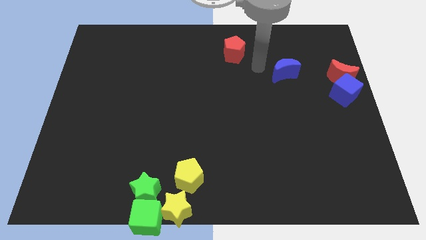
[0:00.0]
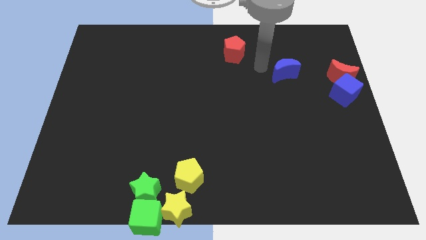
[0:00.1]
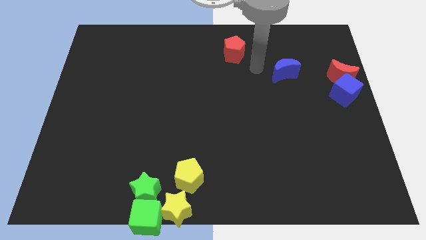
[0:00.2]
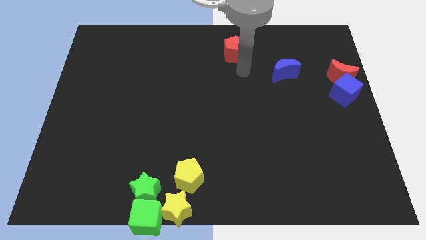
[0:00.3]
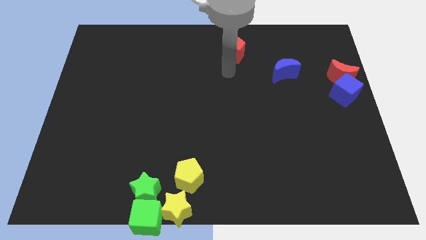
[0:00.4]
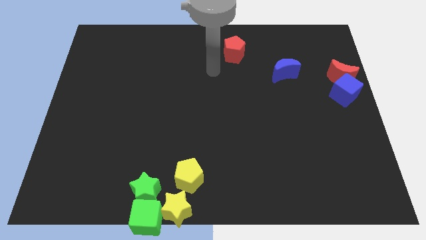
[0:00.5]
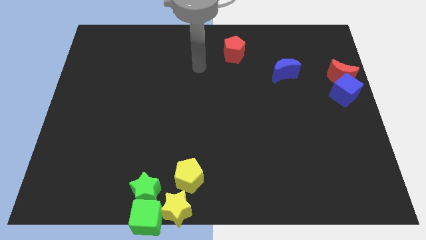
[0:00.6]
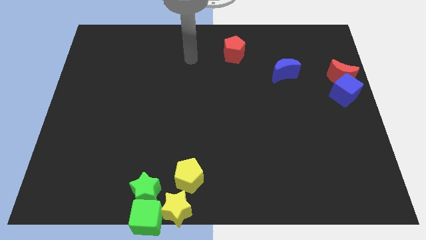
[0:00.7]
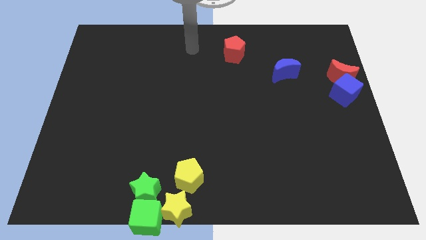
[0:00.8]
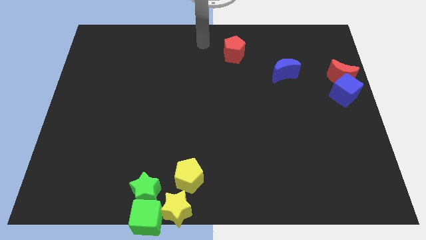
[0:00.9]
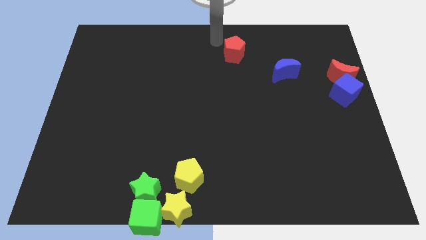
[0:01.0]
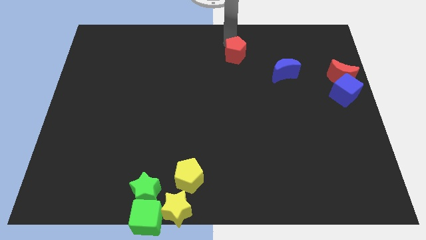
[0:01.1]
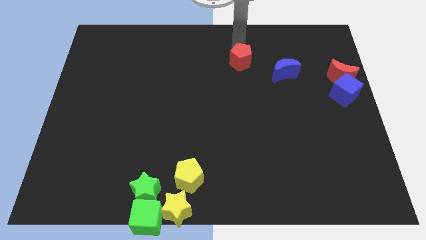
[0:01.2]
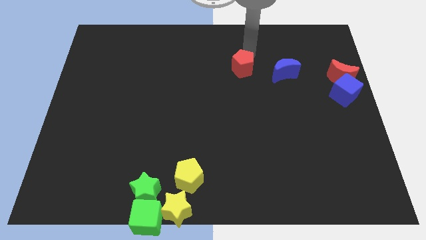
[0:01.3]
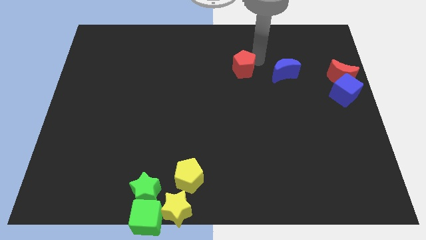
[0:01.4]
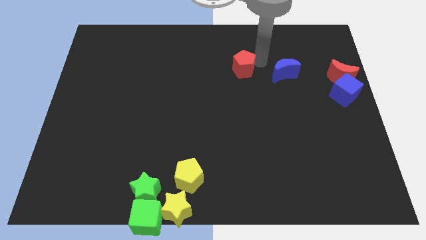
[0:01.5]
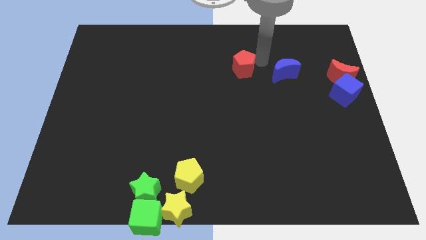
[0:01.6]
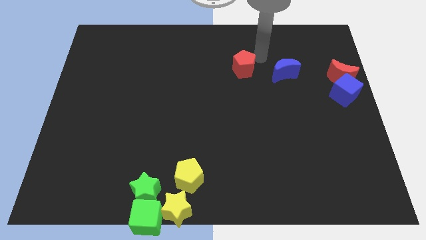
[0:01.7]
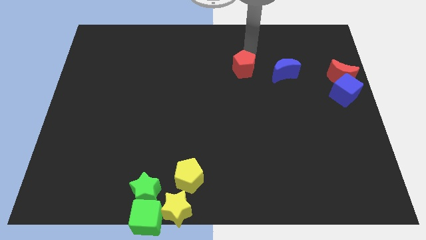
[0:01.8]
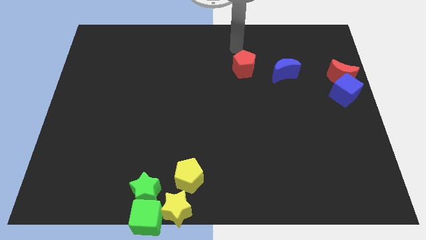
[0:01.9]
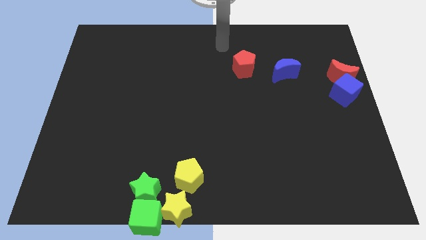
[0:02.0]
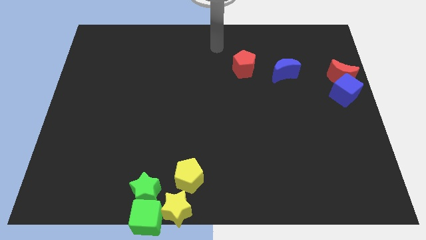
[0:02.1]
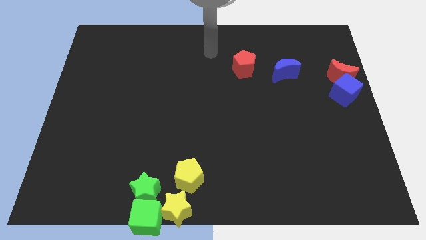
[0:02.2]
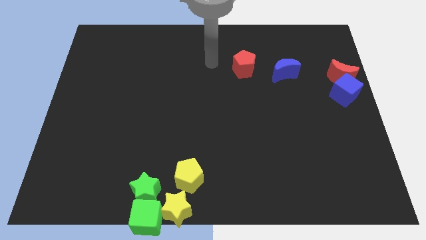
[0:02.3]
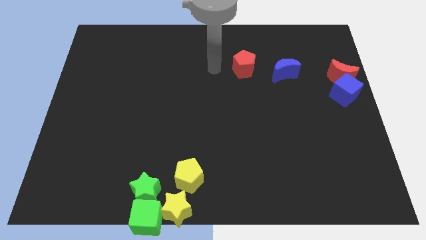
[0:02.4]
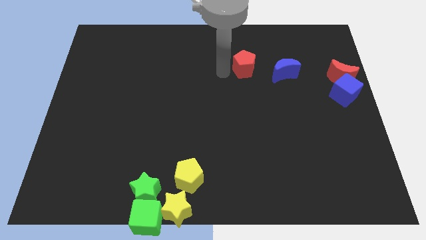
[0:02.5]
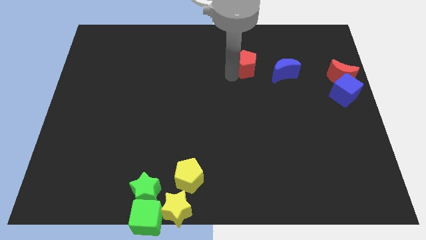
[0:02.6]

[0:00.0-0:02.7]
move the red pentagon to the left of the blue crescent

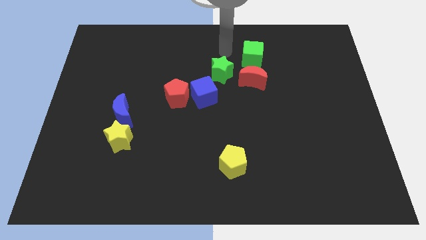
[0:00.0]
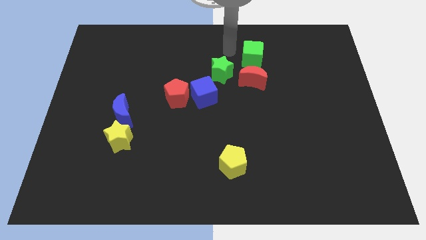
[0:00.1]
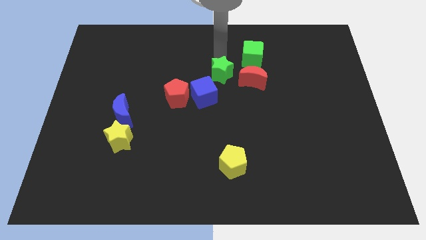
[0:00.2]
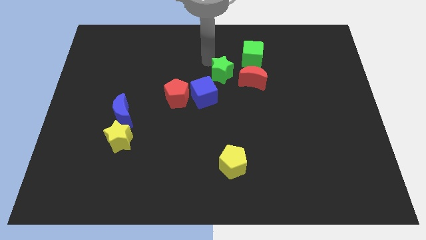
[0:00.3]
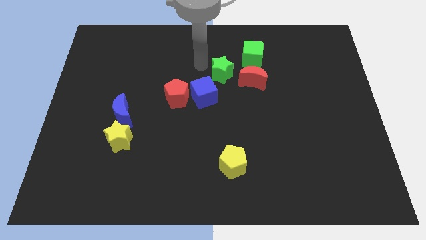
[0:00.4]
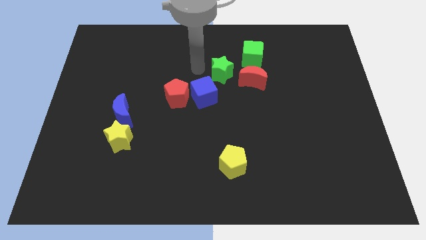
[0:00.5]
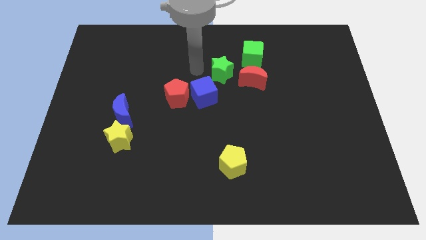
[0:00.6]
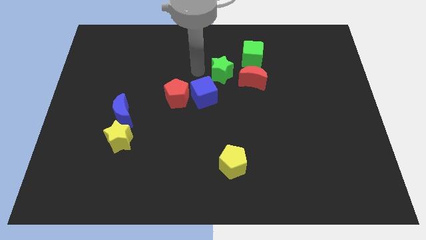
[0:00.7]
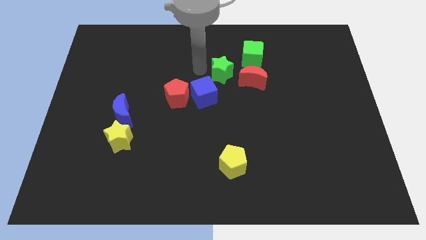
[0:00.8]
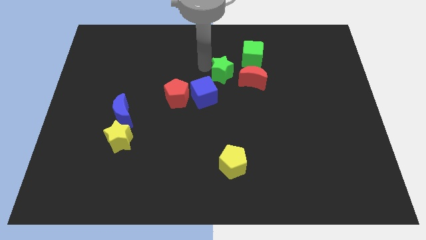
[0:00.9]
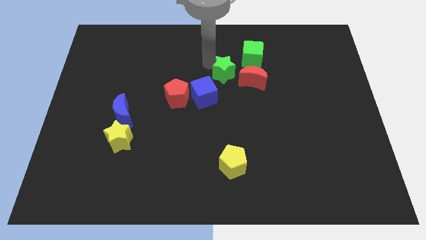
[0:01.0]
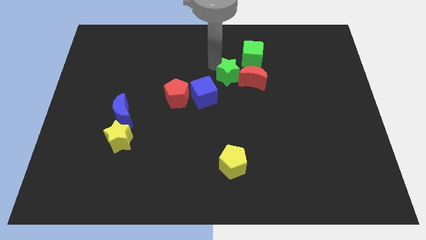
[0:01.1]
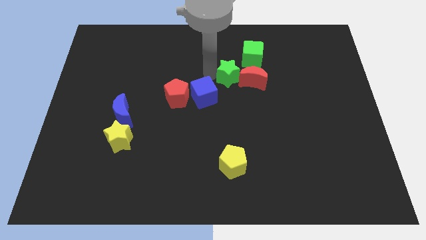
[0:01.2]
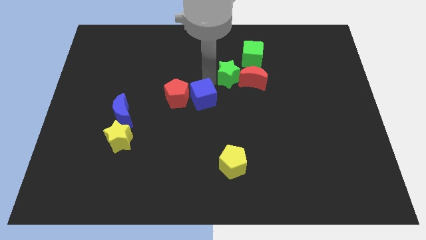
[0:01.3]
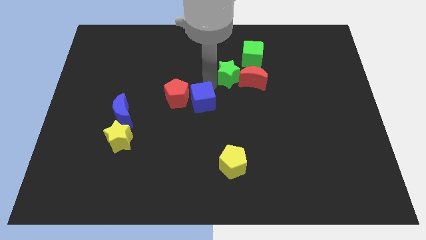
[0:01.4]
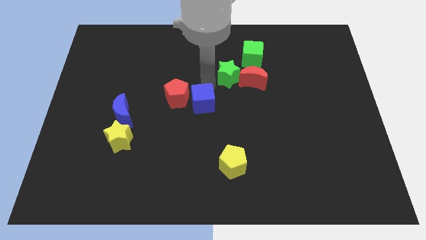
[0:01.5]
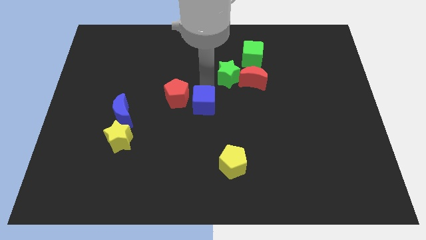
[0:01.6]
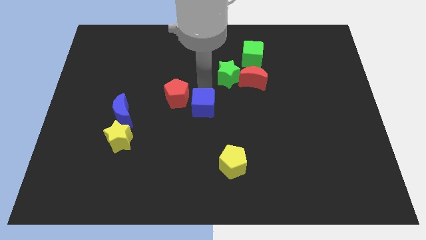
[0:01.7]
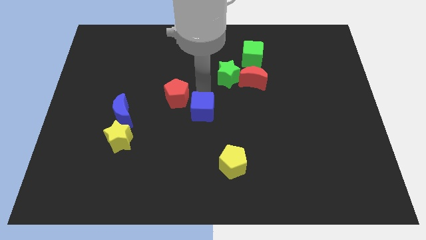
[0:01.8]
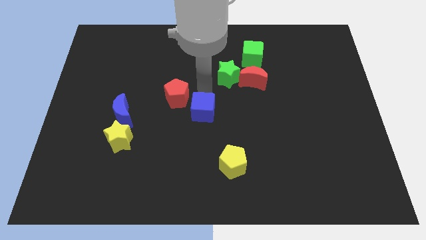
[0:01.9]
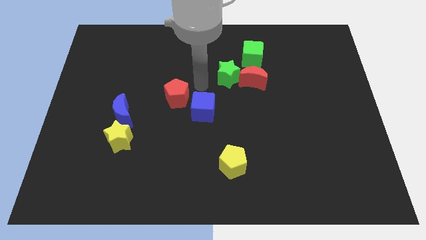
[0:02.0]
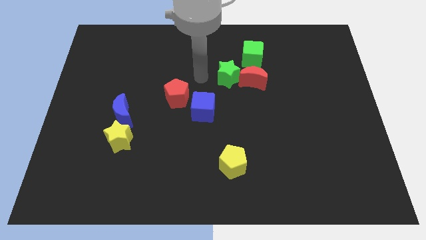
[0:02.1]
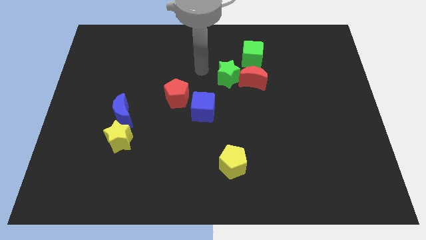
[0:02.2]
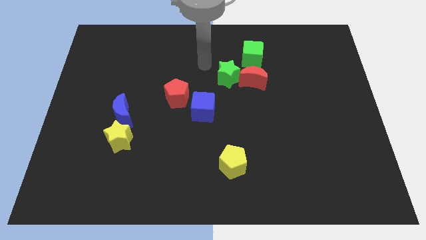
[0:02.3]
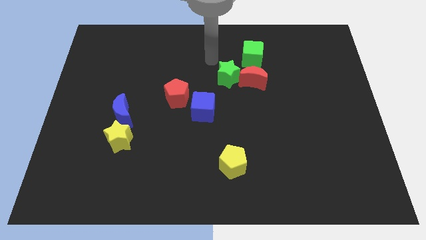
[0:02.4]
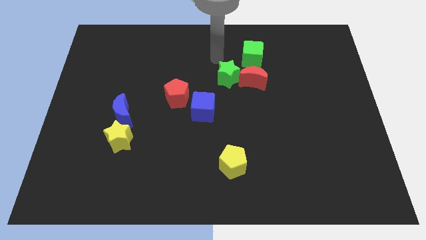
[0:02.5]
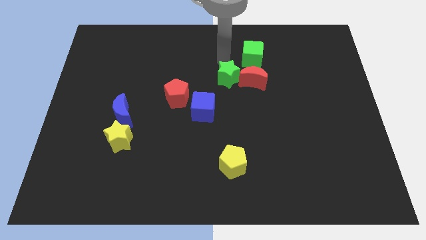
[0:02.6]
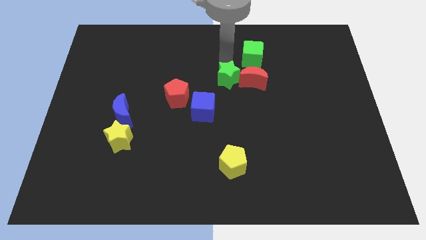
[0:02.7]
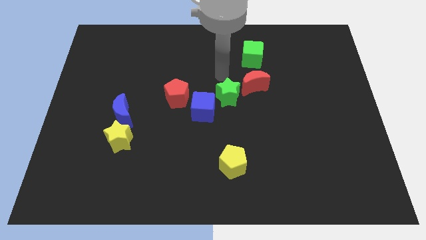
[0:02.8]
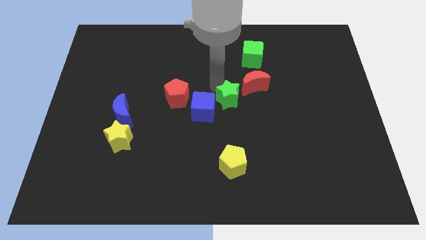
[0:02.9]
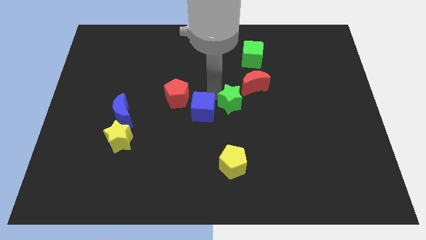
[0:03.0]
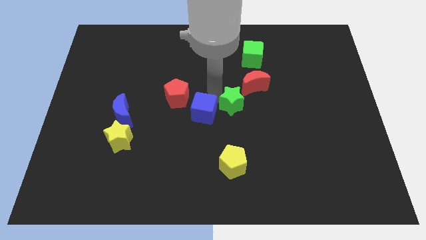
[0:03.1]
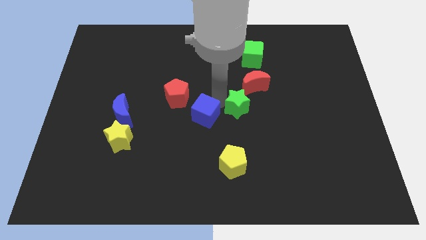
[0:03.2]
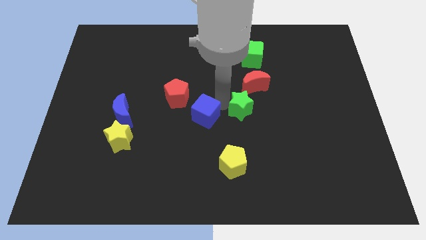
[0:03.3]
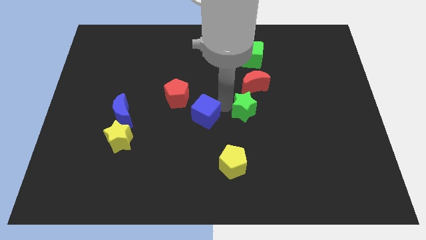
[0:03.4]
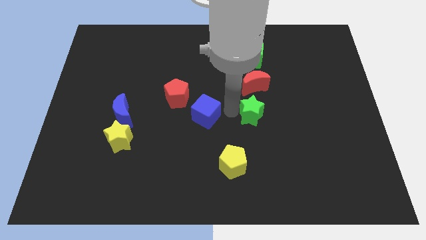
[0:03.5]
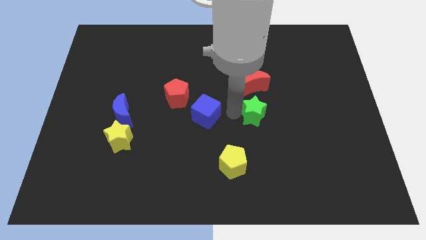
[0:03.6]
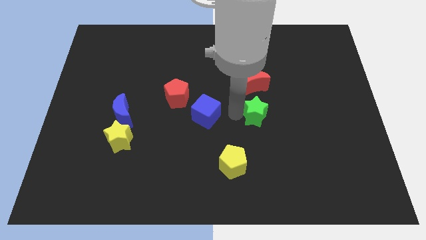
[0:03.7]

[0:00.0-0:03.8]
move the green star to the bottom of the red crescent

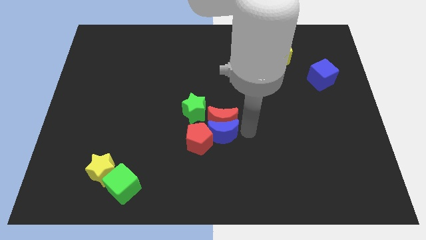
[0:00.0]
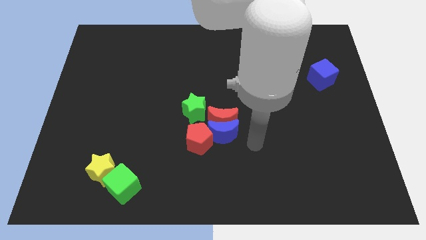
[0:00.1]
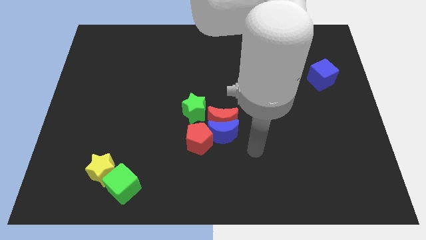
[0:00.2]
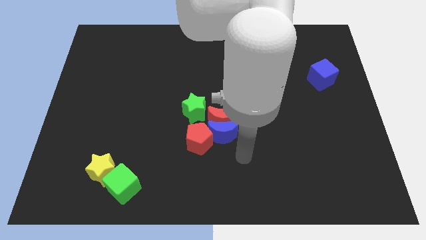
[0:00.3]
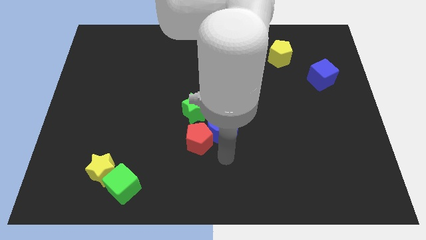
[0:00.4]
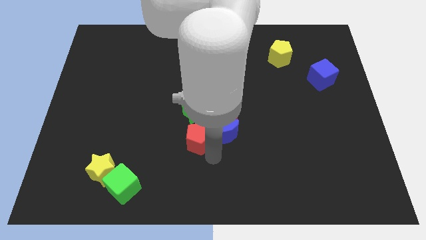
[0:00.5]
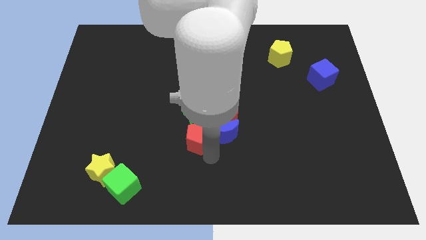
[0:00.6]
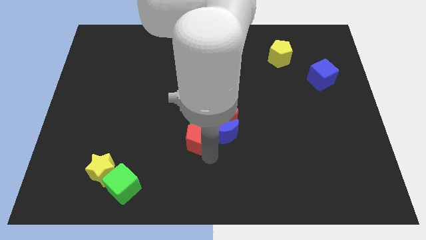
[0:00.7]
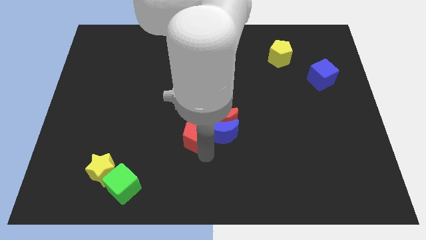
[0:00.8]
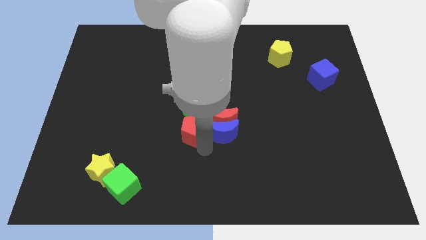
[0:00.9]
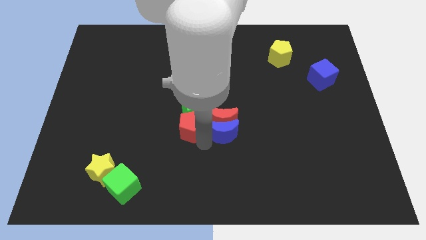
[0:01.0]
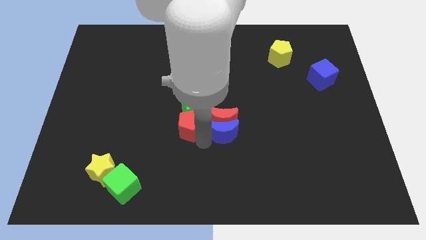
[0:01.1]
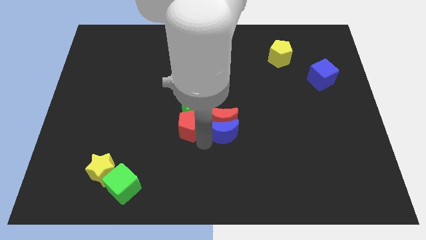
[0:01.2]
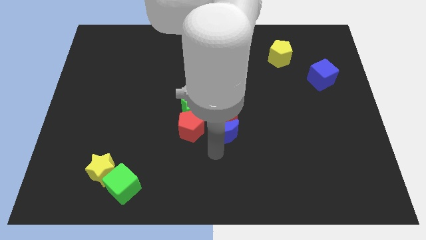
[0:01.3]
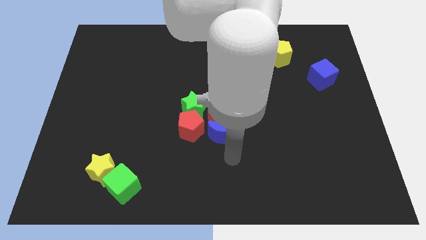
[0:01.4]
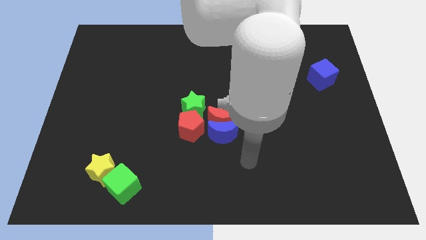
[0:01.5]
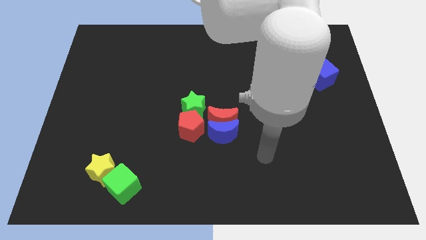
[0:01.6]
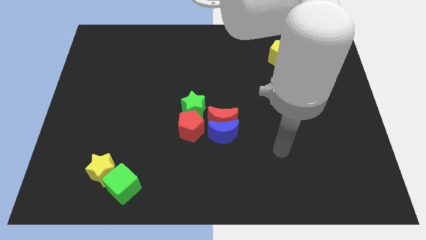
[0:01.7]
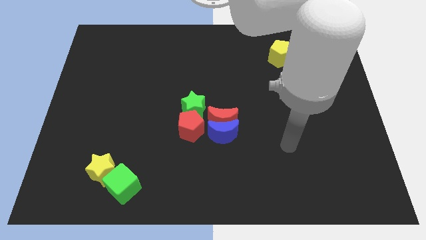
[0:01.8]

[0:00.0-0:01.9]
push the red pentagon towards the green star

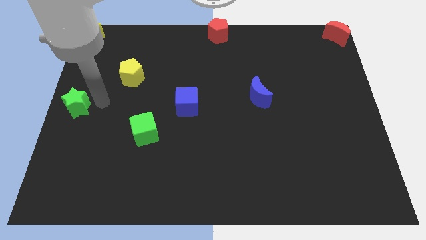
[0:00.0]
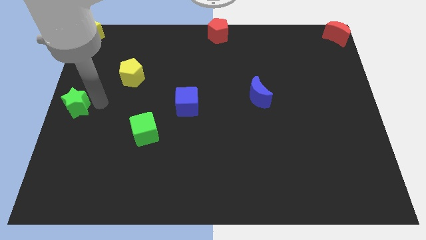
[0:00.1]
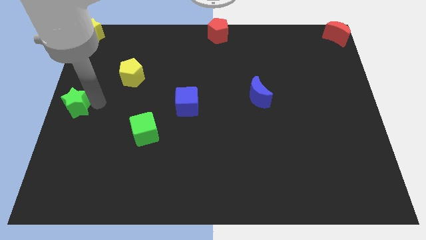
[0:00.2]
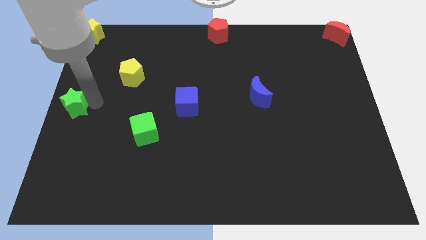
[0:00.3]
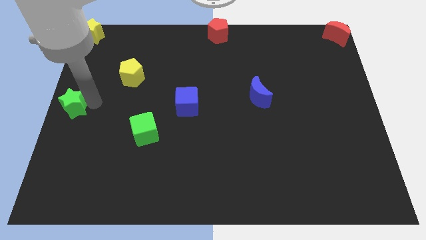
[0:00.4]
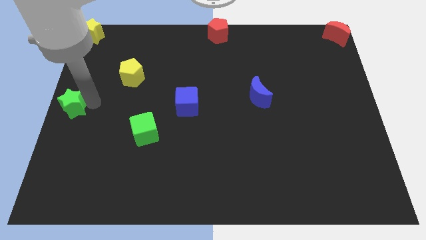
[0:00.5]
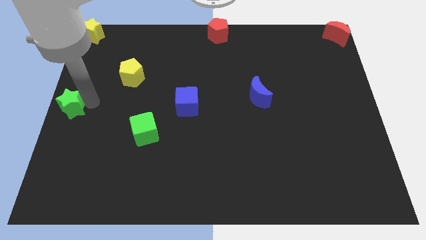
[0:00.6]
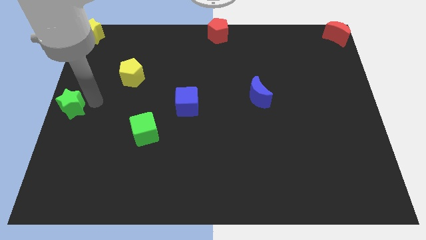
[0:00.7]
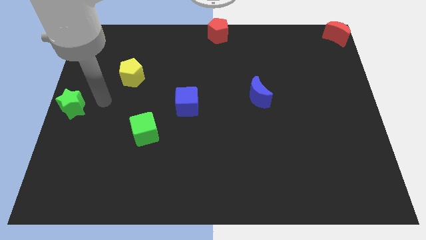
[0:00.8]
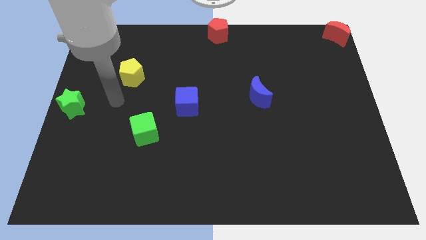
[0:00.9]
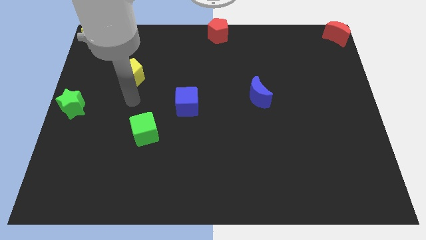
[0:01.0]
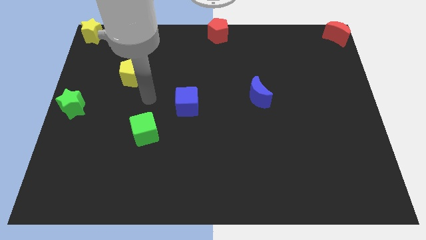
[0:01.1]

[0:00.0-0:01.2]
place the green star towards the center left side of the board
